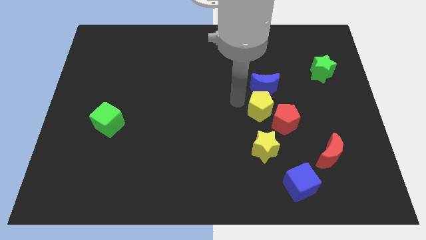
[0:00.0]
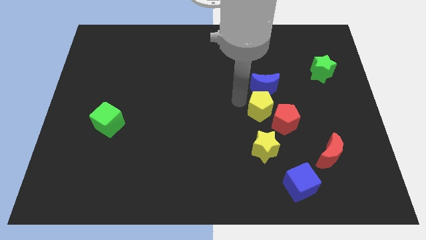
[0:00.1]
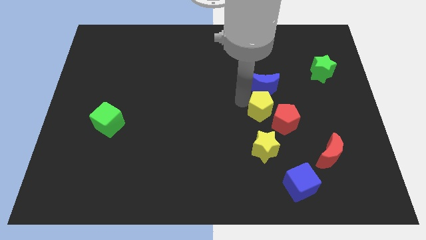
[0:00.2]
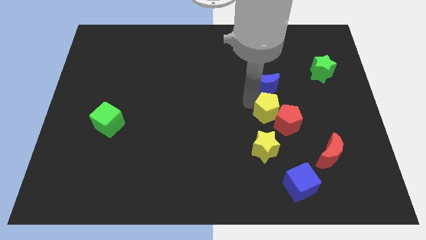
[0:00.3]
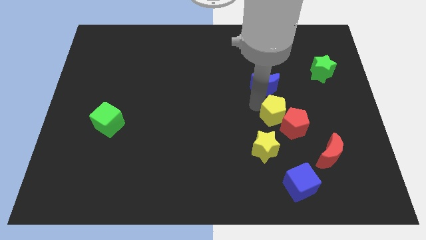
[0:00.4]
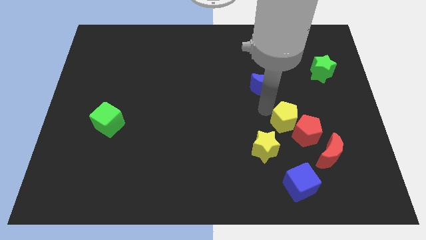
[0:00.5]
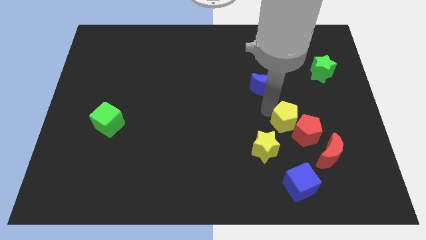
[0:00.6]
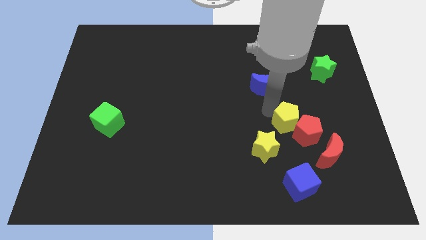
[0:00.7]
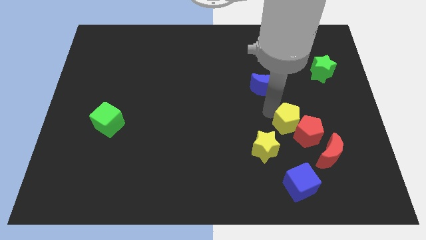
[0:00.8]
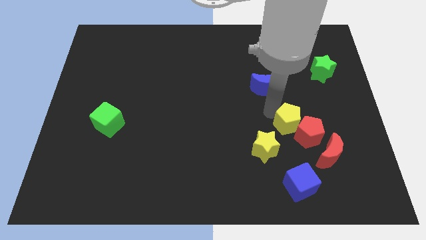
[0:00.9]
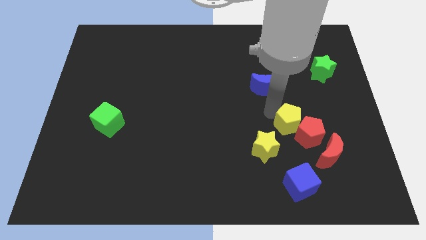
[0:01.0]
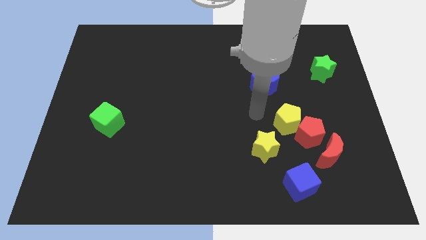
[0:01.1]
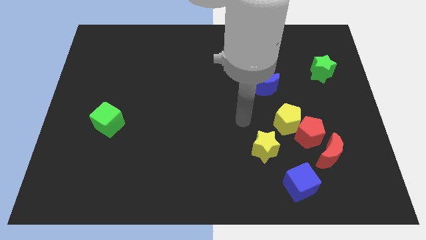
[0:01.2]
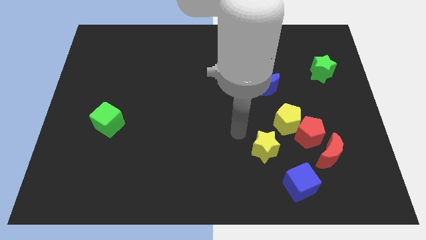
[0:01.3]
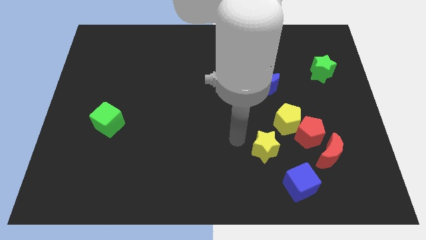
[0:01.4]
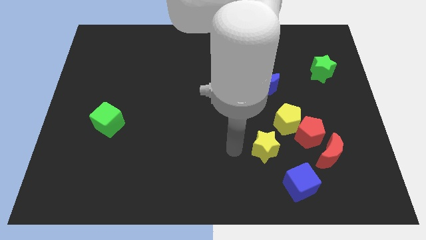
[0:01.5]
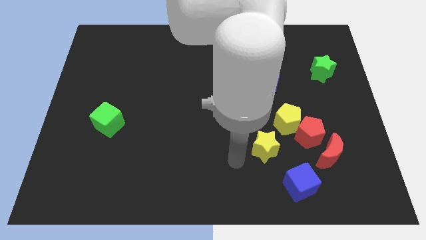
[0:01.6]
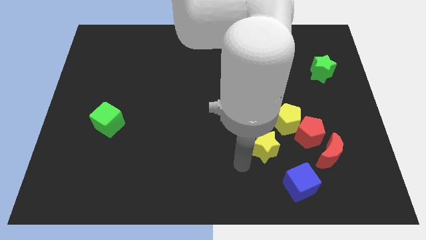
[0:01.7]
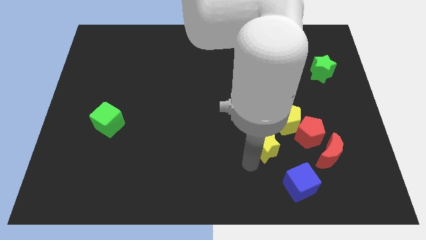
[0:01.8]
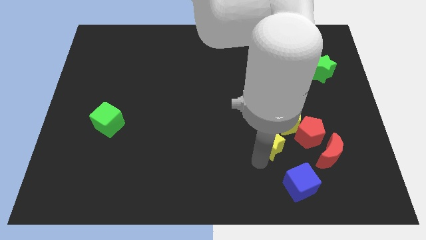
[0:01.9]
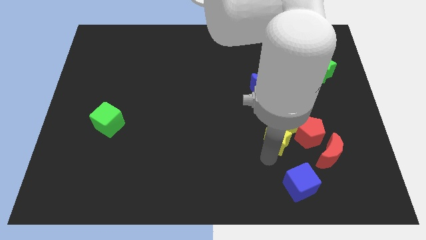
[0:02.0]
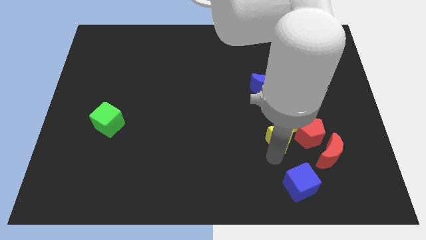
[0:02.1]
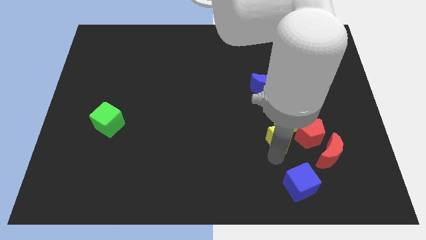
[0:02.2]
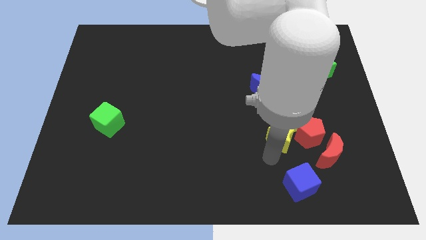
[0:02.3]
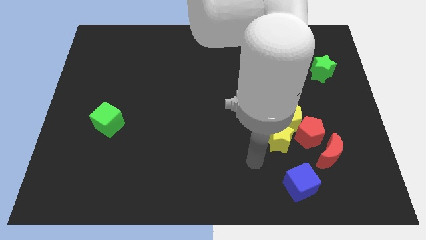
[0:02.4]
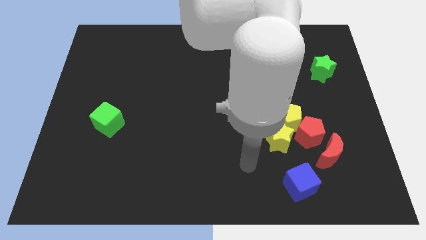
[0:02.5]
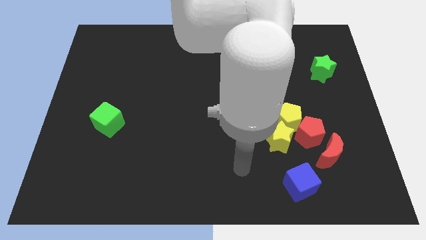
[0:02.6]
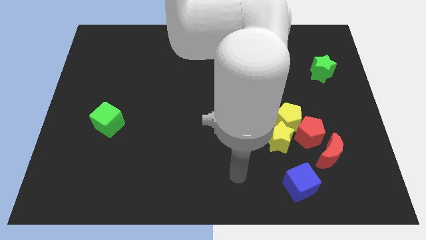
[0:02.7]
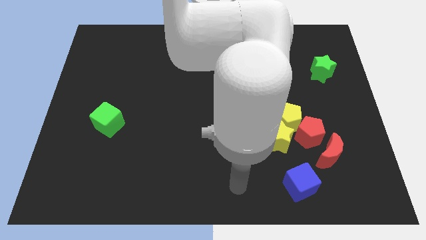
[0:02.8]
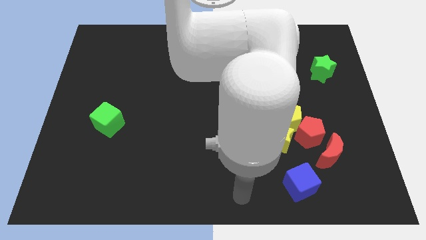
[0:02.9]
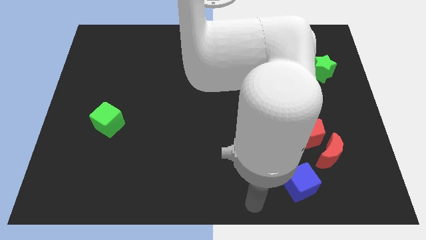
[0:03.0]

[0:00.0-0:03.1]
group up the yellow blocks together

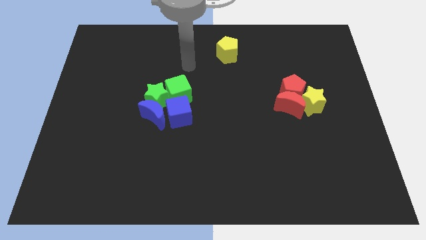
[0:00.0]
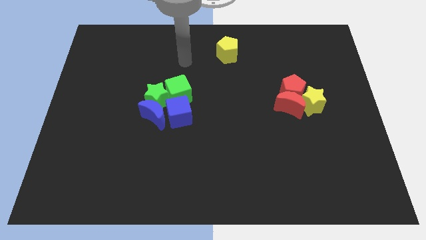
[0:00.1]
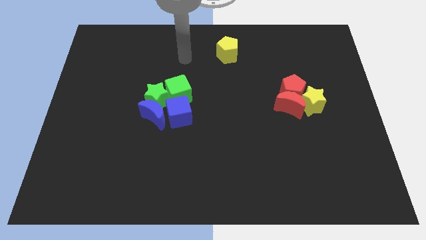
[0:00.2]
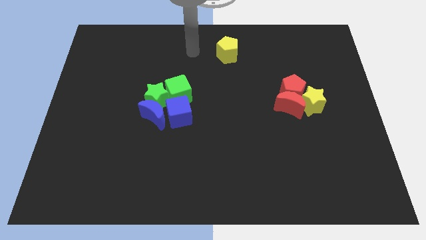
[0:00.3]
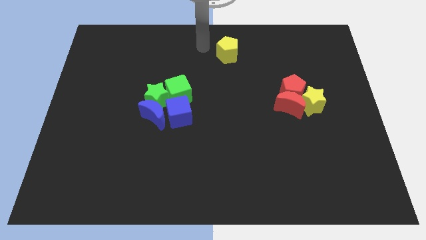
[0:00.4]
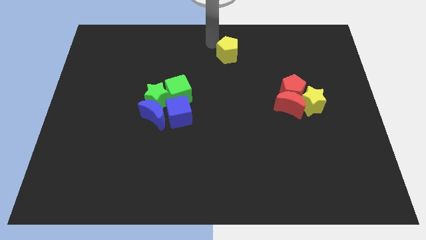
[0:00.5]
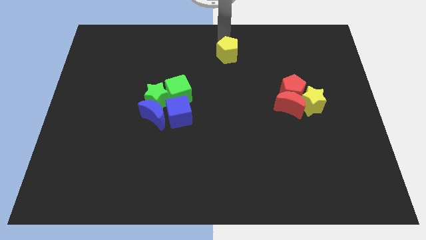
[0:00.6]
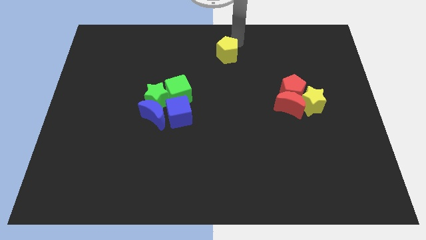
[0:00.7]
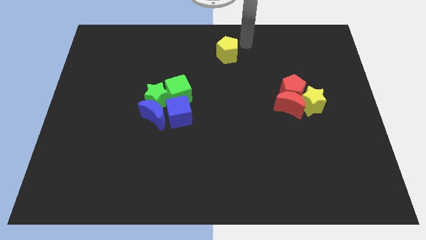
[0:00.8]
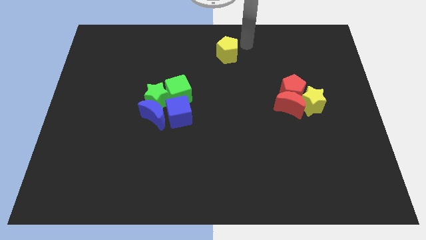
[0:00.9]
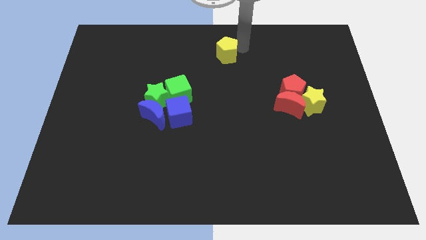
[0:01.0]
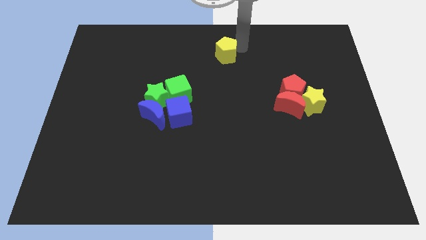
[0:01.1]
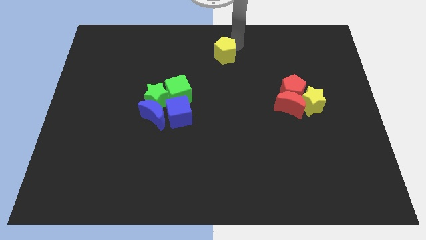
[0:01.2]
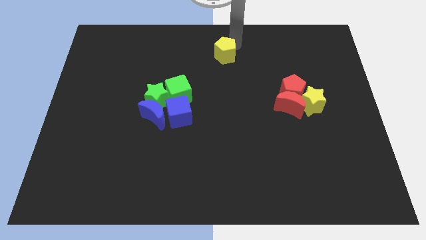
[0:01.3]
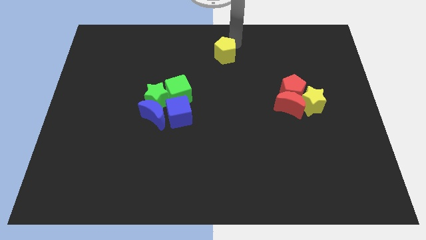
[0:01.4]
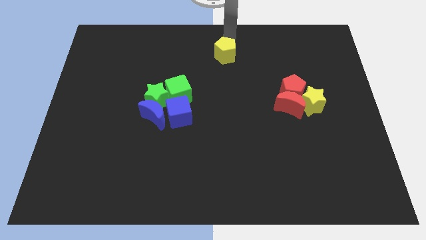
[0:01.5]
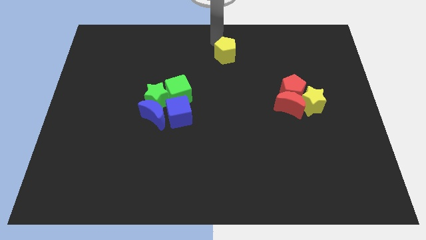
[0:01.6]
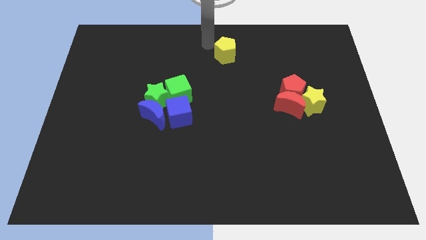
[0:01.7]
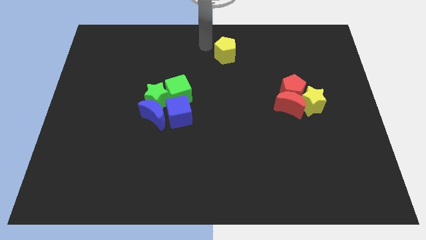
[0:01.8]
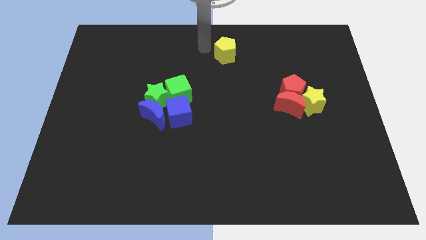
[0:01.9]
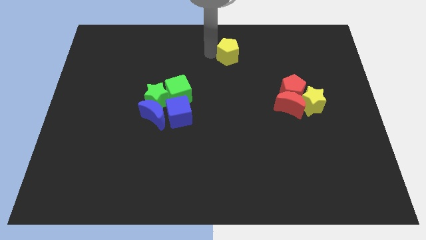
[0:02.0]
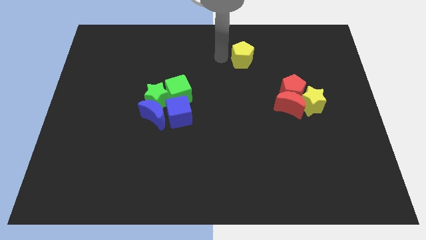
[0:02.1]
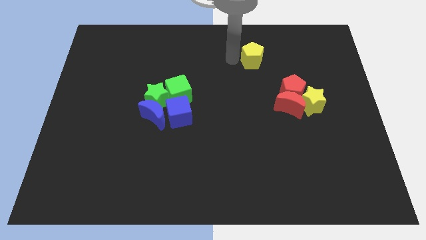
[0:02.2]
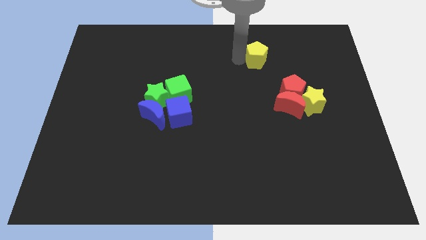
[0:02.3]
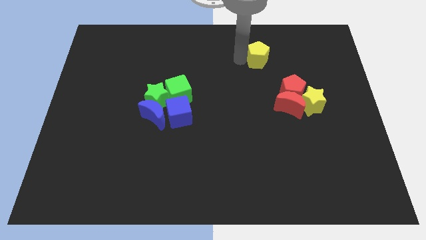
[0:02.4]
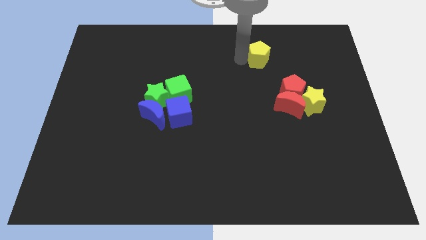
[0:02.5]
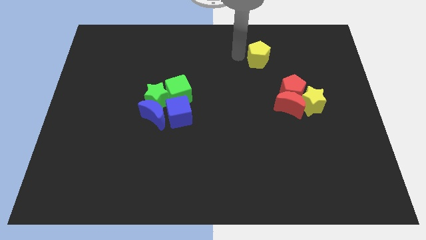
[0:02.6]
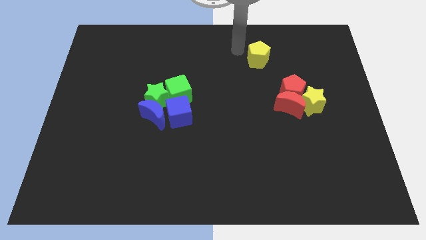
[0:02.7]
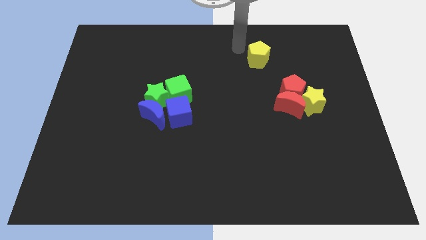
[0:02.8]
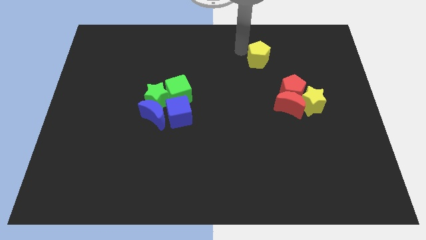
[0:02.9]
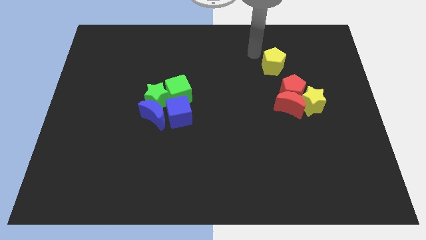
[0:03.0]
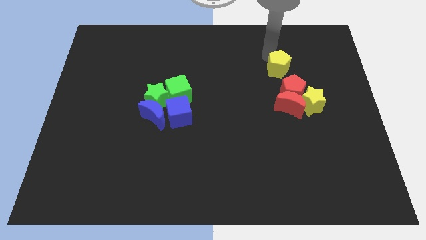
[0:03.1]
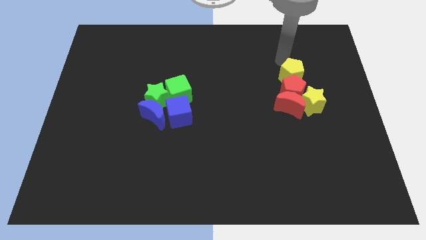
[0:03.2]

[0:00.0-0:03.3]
move the yellow pentagon above the red pentagon

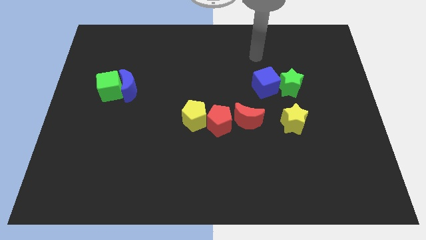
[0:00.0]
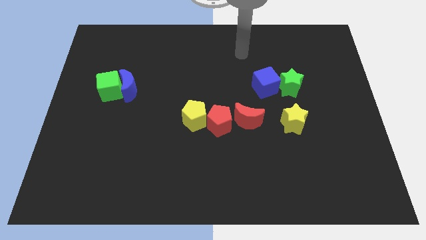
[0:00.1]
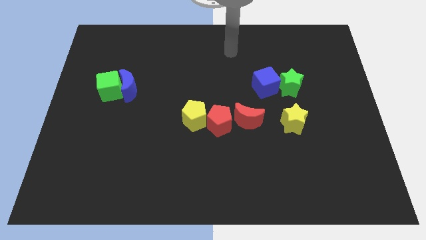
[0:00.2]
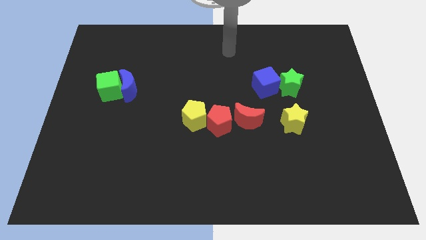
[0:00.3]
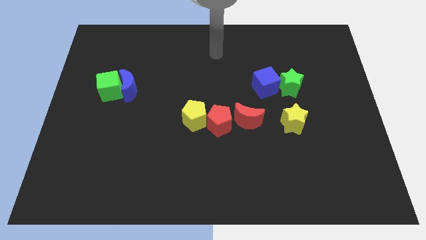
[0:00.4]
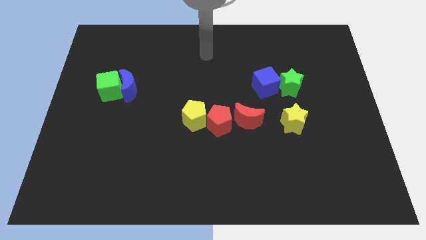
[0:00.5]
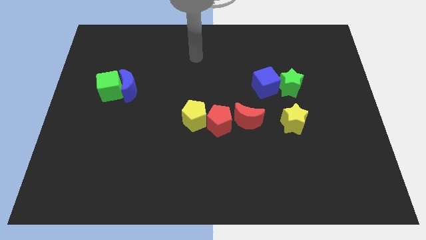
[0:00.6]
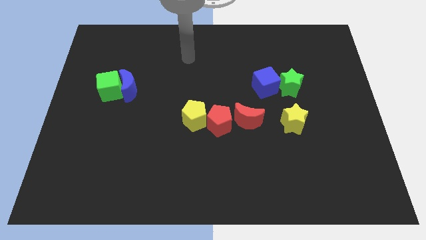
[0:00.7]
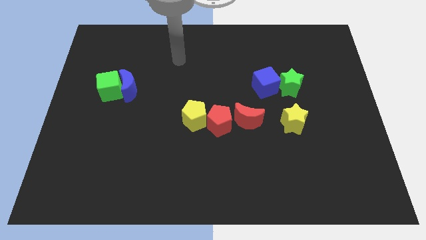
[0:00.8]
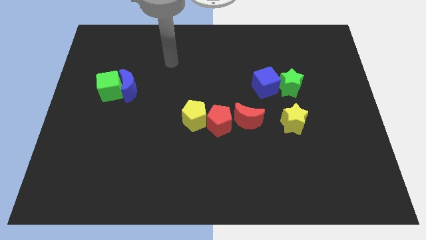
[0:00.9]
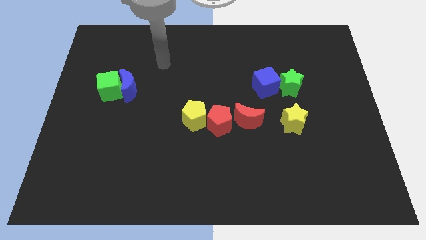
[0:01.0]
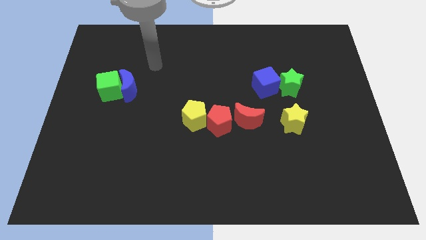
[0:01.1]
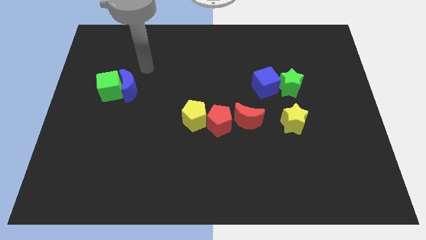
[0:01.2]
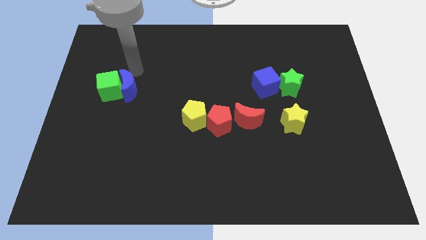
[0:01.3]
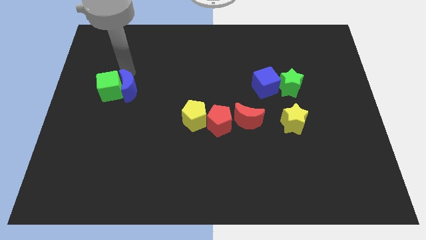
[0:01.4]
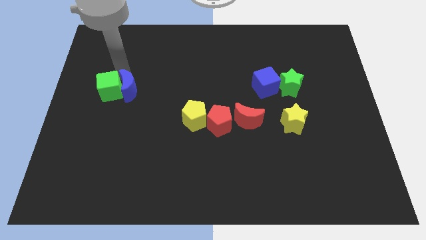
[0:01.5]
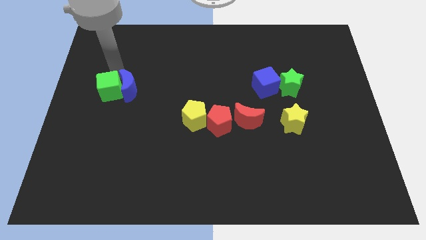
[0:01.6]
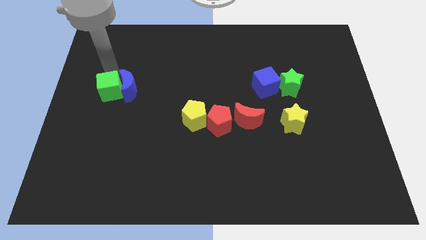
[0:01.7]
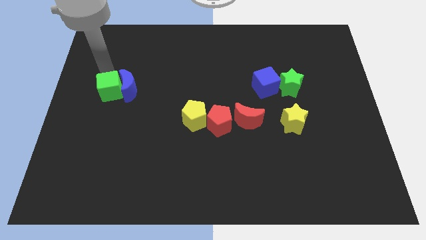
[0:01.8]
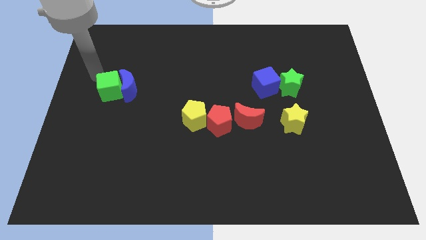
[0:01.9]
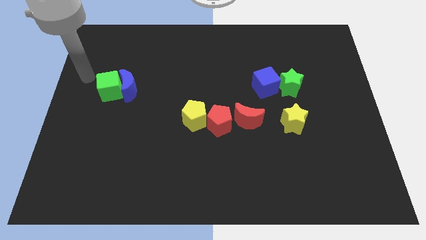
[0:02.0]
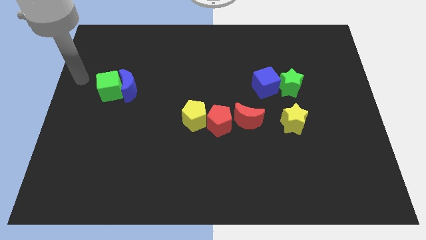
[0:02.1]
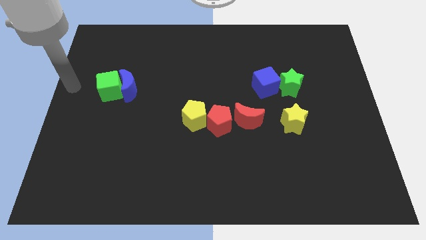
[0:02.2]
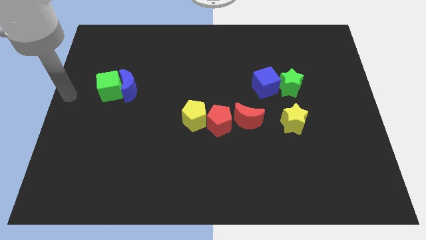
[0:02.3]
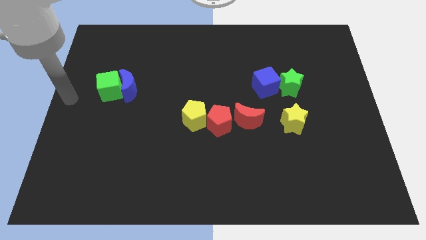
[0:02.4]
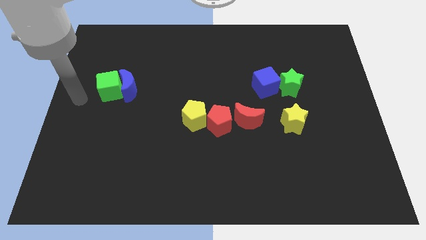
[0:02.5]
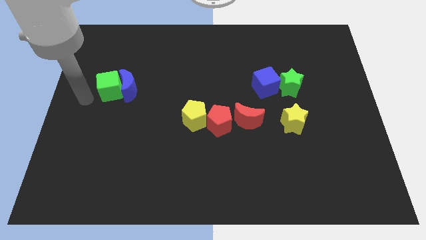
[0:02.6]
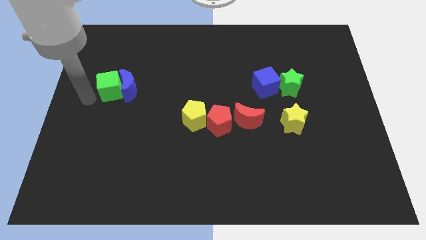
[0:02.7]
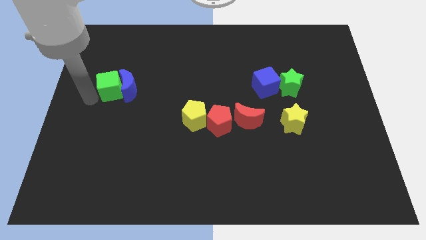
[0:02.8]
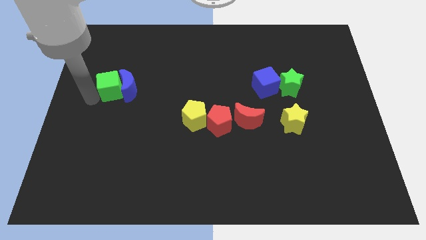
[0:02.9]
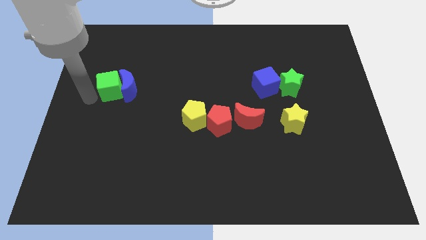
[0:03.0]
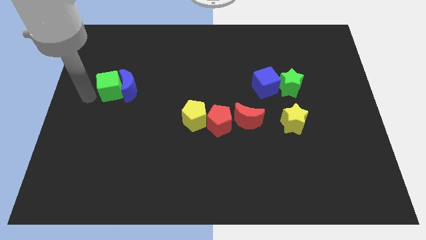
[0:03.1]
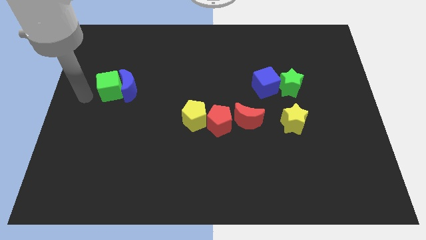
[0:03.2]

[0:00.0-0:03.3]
point your arm at the right side of the green cube
